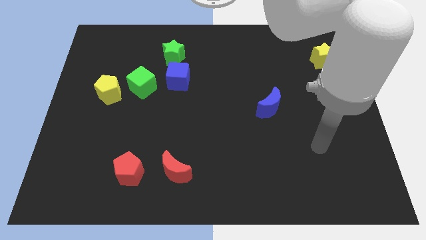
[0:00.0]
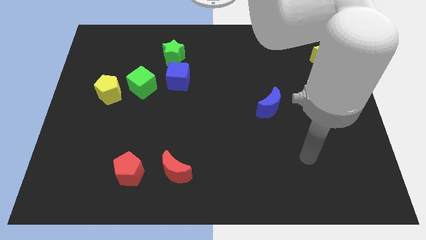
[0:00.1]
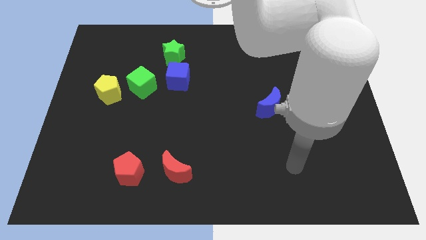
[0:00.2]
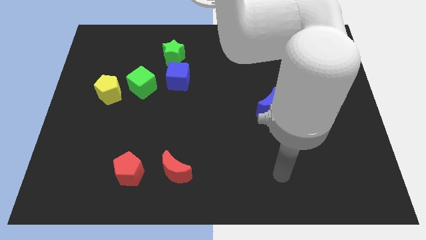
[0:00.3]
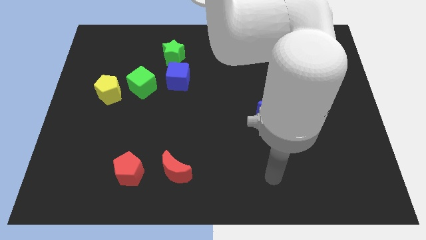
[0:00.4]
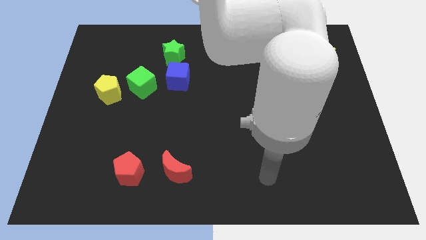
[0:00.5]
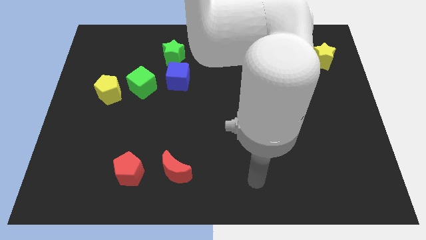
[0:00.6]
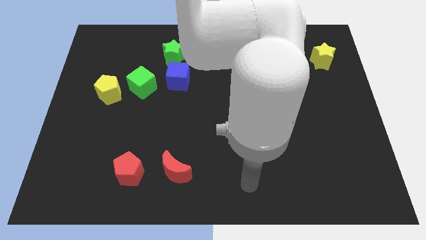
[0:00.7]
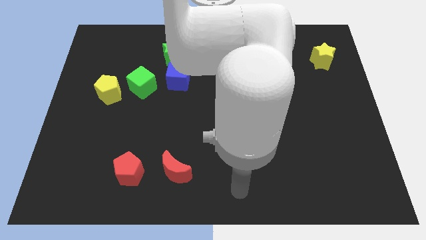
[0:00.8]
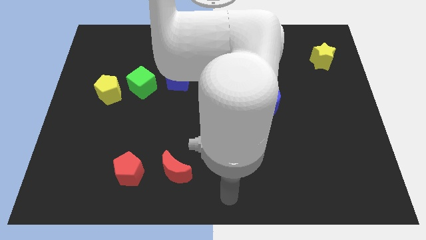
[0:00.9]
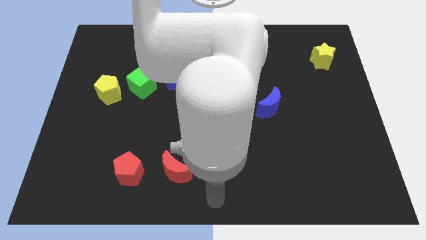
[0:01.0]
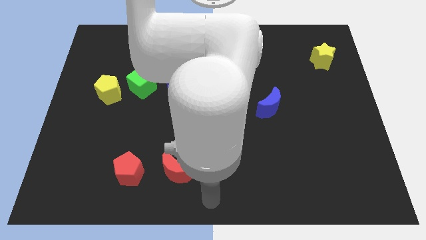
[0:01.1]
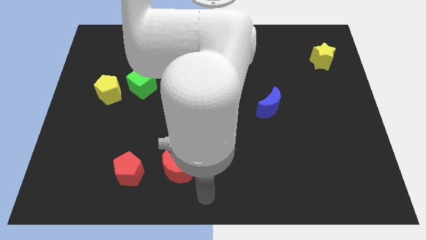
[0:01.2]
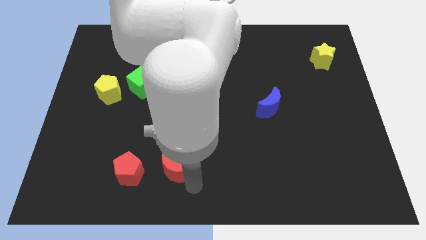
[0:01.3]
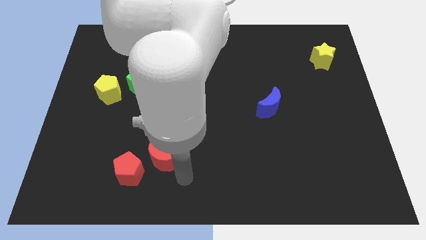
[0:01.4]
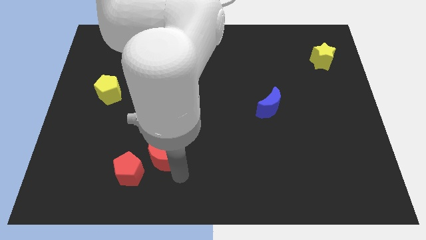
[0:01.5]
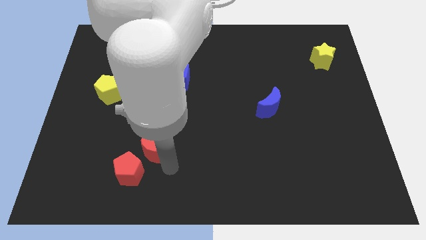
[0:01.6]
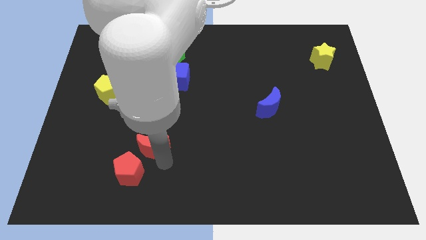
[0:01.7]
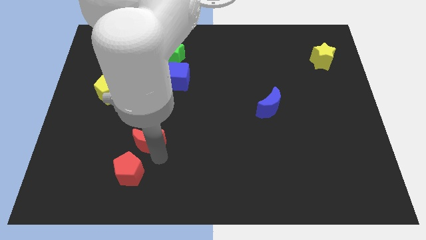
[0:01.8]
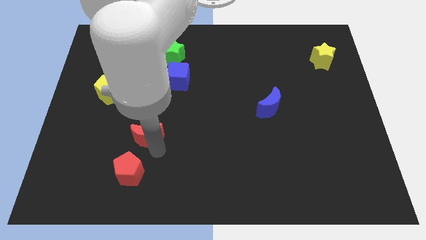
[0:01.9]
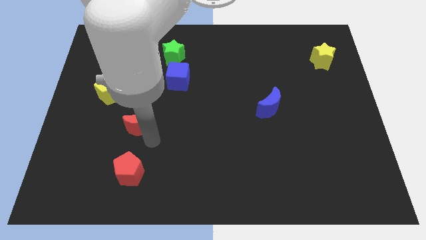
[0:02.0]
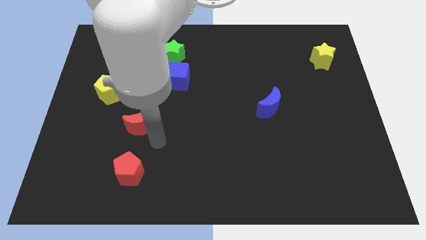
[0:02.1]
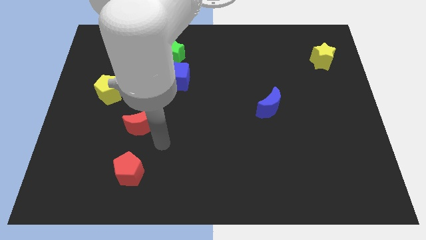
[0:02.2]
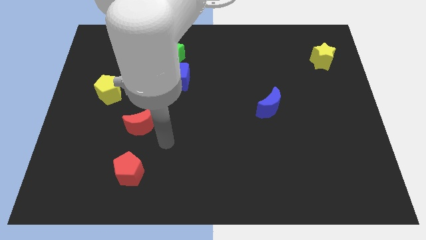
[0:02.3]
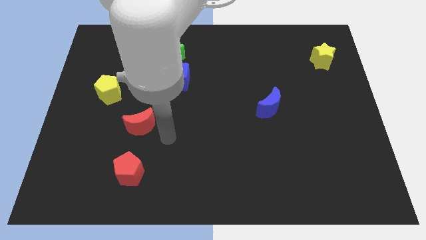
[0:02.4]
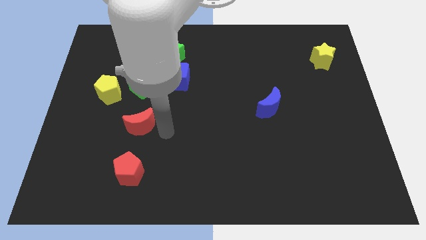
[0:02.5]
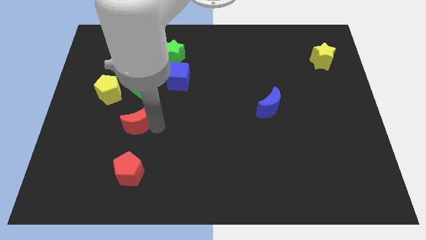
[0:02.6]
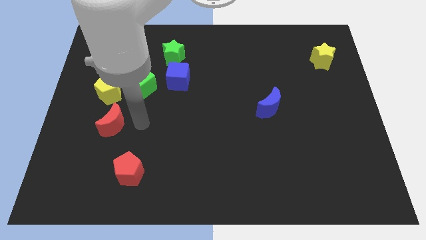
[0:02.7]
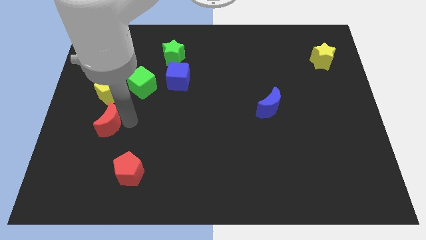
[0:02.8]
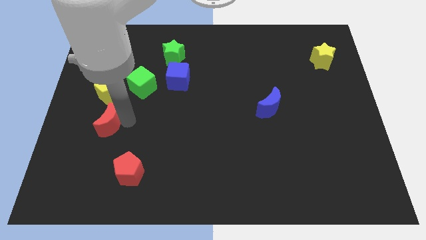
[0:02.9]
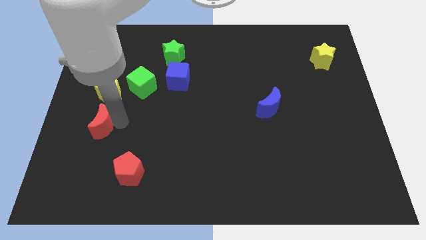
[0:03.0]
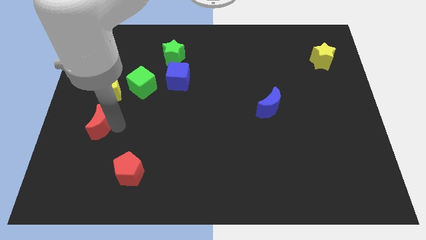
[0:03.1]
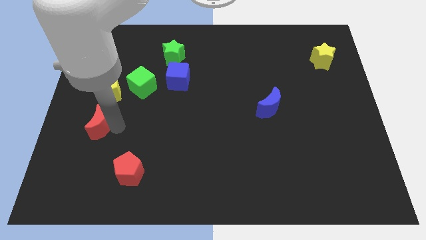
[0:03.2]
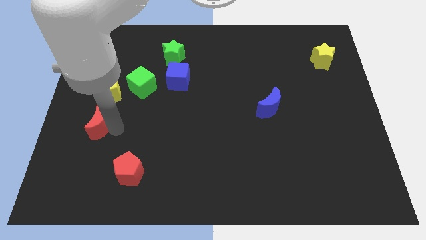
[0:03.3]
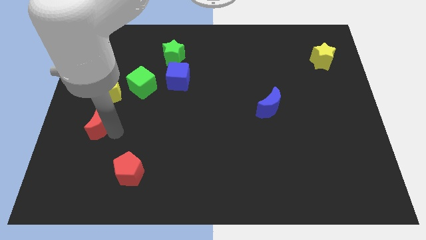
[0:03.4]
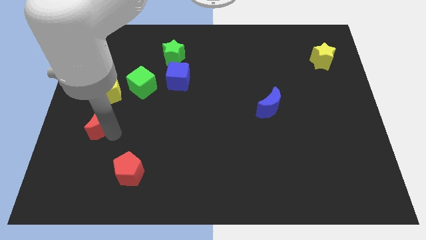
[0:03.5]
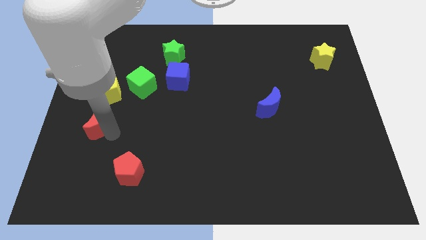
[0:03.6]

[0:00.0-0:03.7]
move the red crescent below the yellow pentagon

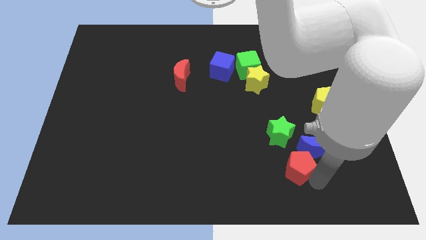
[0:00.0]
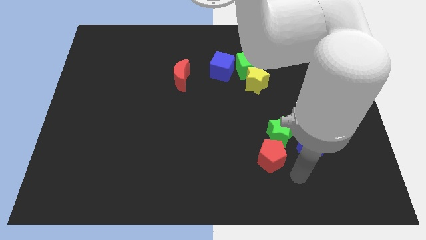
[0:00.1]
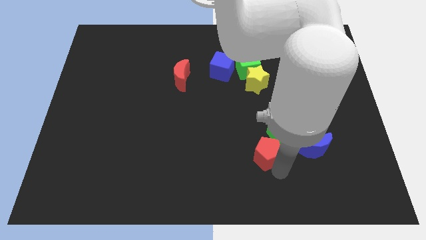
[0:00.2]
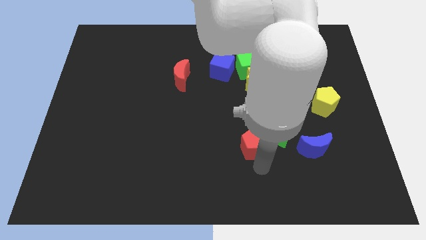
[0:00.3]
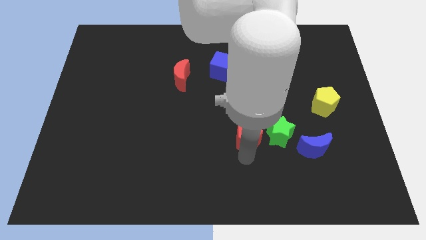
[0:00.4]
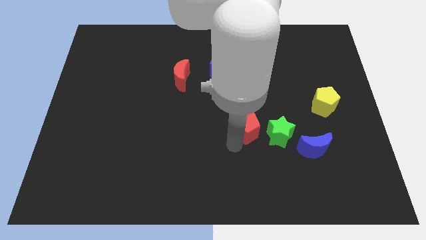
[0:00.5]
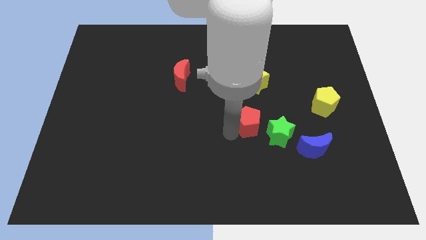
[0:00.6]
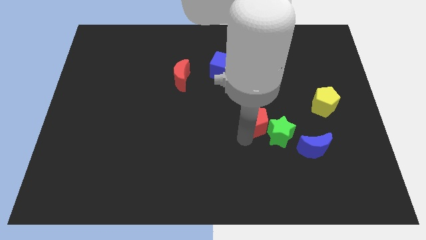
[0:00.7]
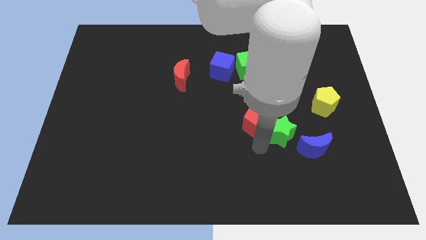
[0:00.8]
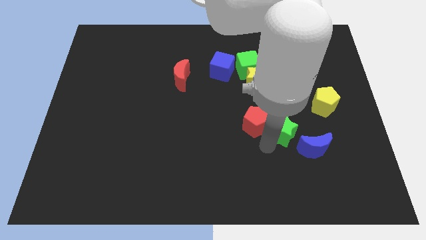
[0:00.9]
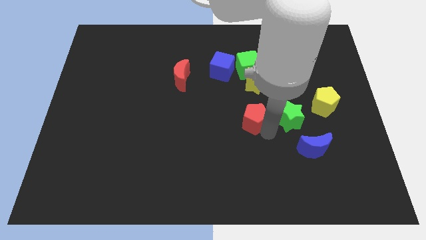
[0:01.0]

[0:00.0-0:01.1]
push the bottom red pentagon to the green star

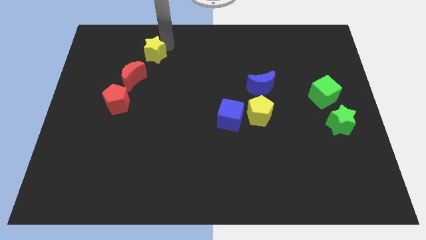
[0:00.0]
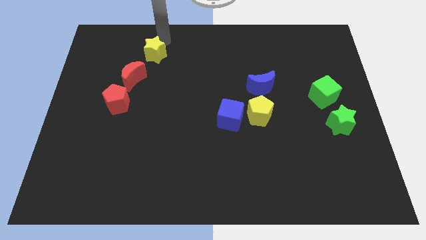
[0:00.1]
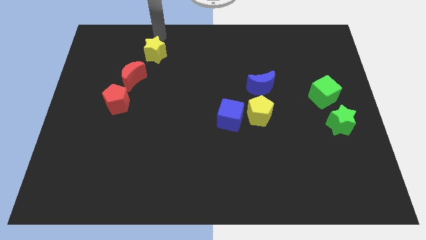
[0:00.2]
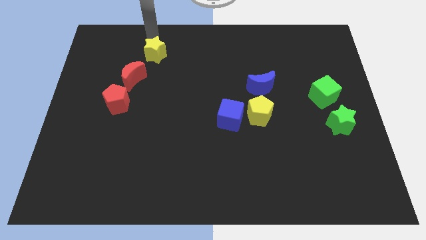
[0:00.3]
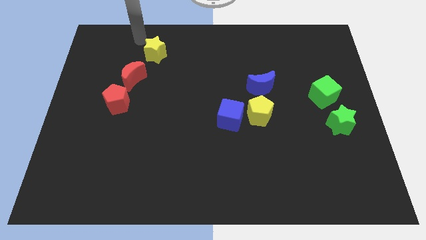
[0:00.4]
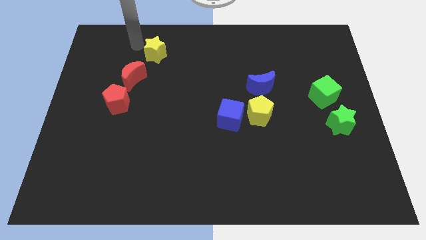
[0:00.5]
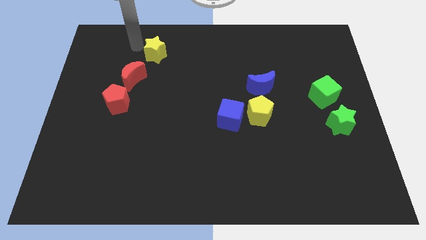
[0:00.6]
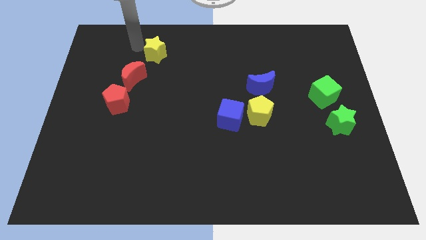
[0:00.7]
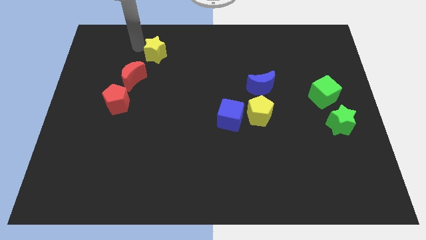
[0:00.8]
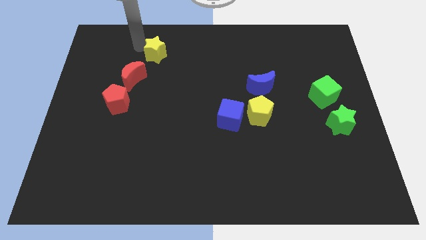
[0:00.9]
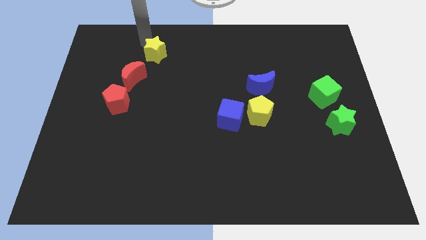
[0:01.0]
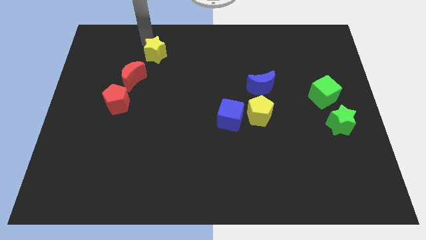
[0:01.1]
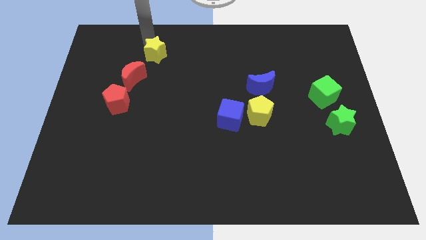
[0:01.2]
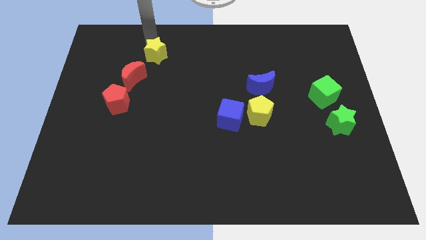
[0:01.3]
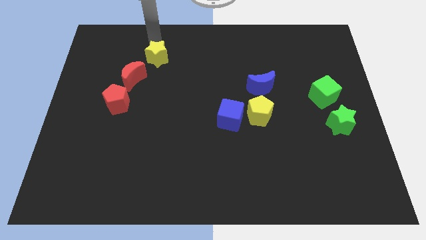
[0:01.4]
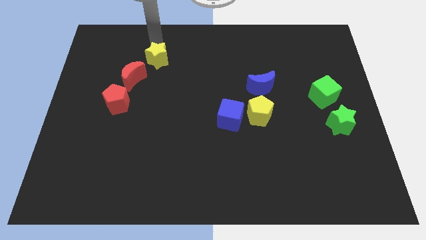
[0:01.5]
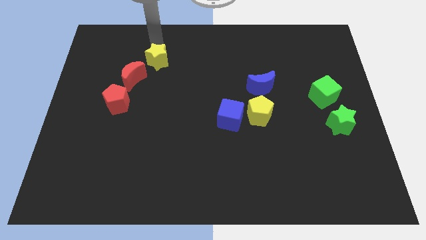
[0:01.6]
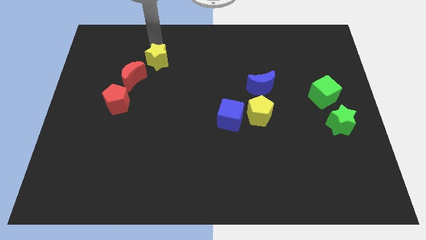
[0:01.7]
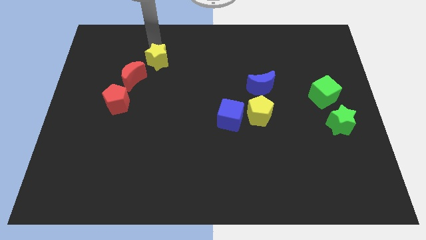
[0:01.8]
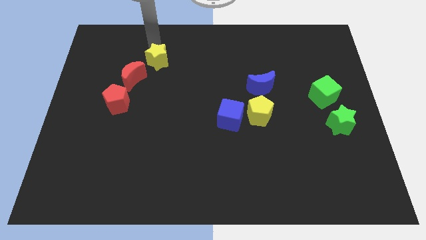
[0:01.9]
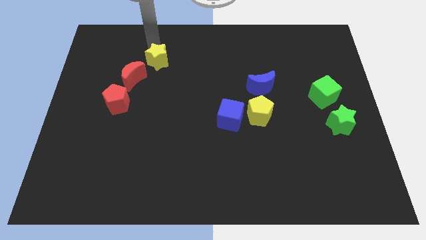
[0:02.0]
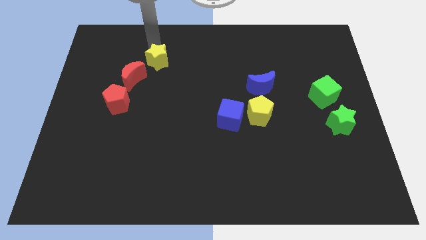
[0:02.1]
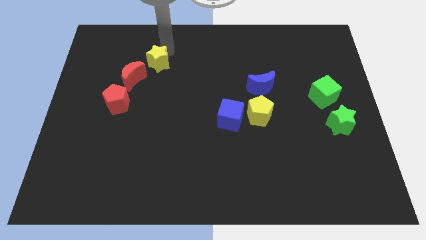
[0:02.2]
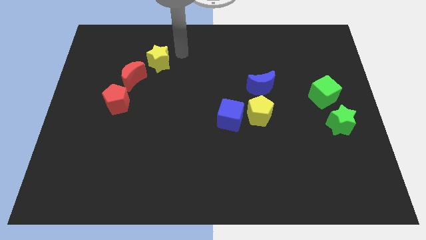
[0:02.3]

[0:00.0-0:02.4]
slightly push the yellow star towards the red crescent

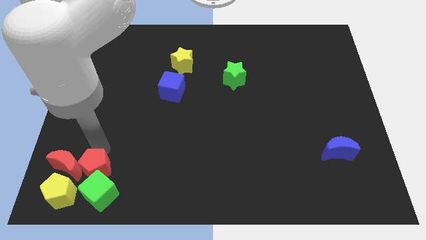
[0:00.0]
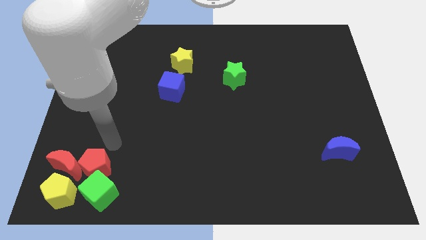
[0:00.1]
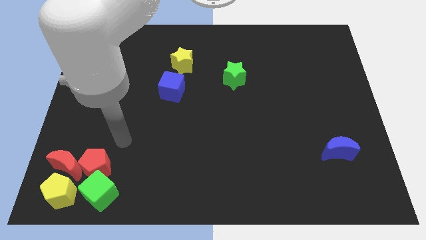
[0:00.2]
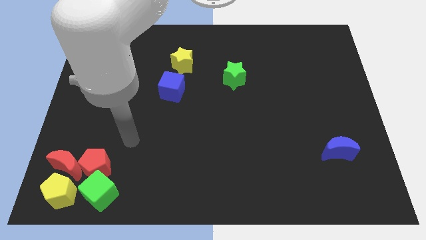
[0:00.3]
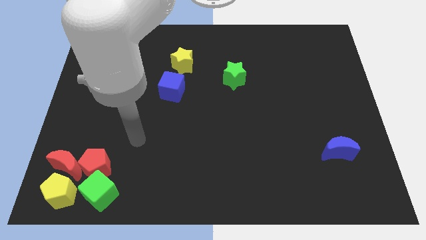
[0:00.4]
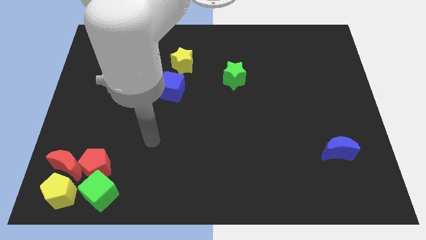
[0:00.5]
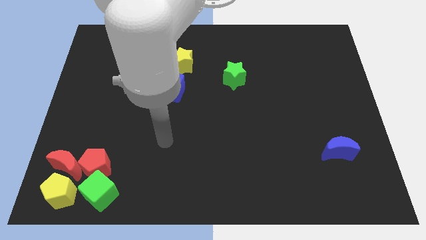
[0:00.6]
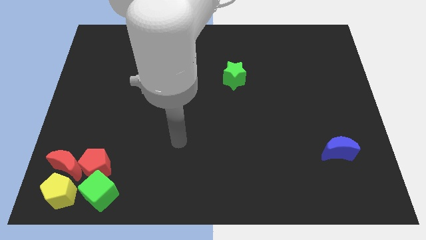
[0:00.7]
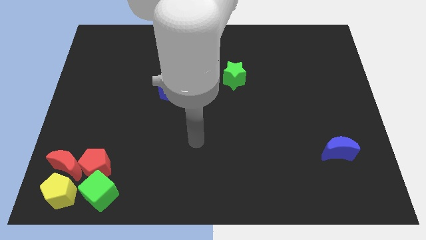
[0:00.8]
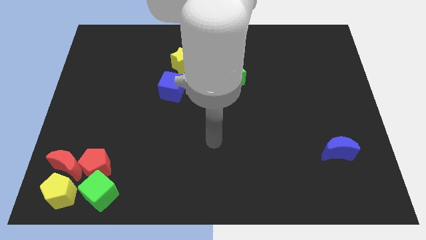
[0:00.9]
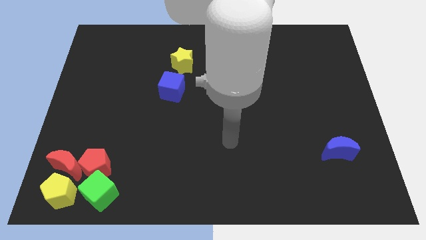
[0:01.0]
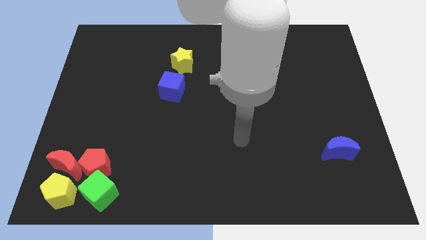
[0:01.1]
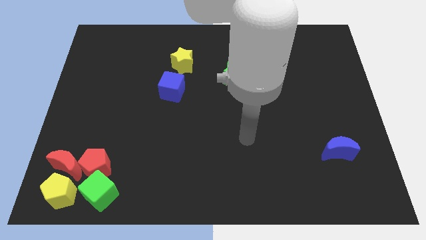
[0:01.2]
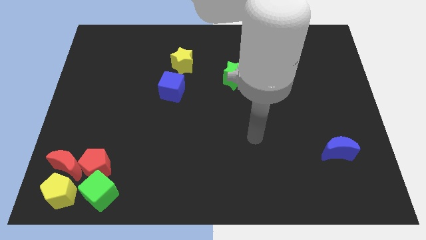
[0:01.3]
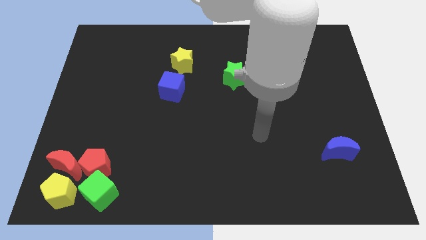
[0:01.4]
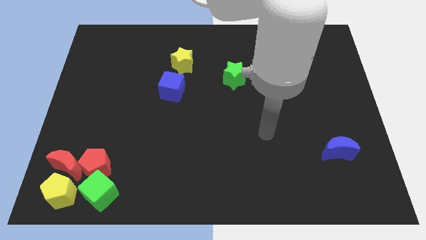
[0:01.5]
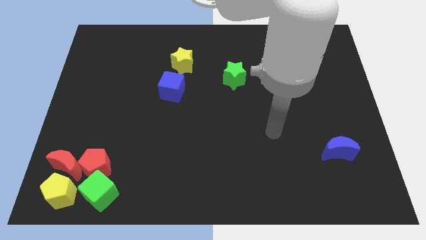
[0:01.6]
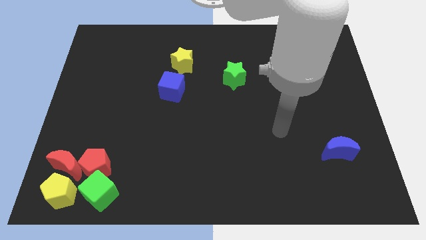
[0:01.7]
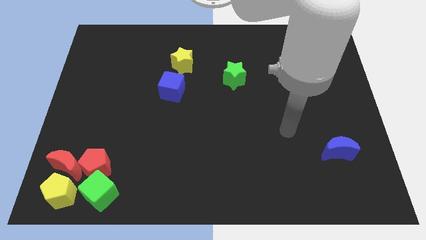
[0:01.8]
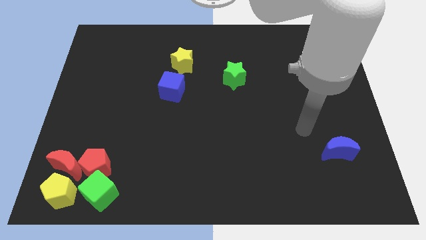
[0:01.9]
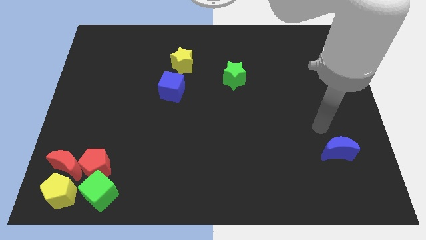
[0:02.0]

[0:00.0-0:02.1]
point your arm on top of blue moon
